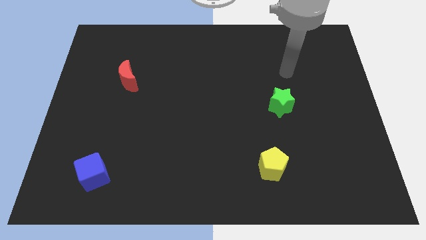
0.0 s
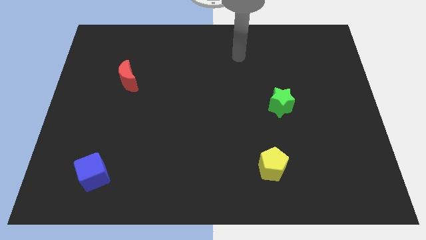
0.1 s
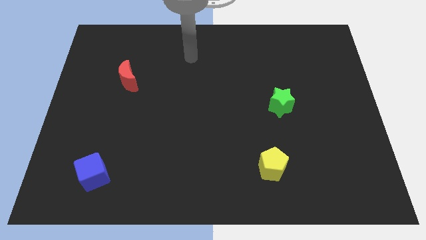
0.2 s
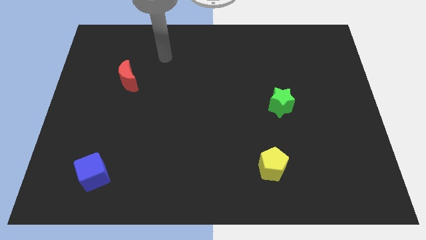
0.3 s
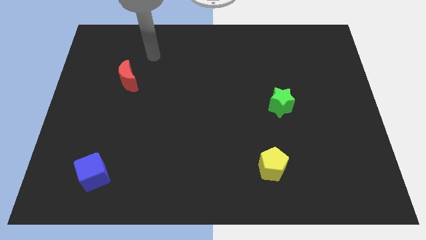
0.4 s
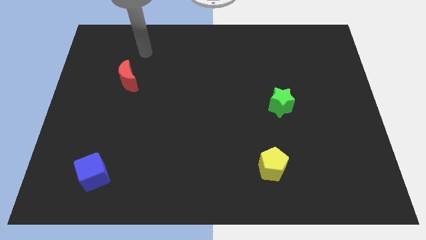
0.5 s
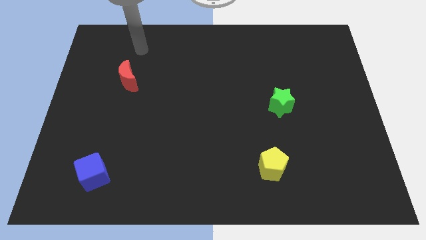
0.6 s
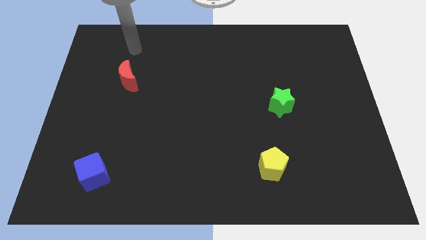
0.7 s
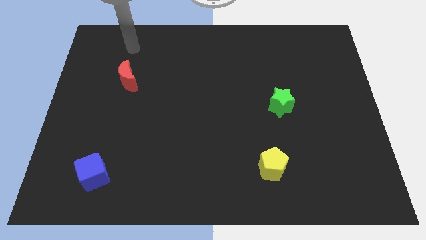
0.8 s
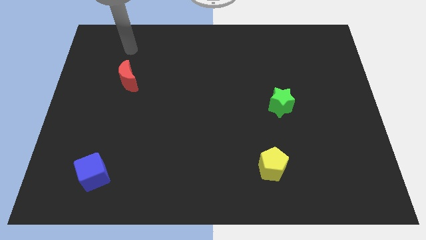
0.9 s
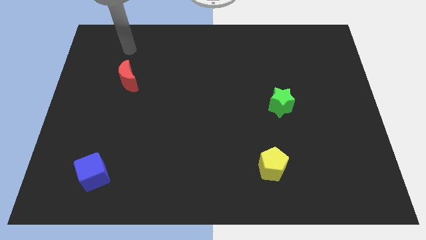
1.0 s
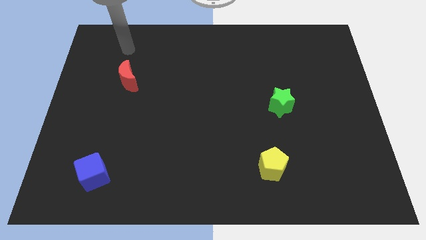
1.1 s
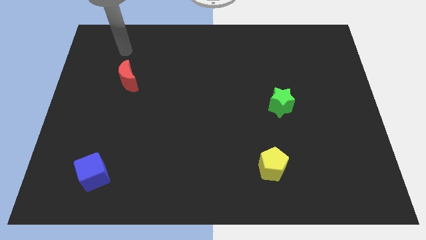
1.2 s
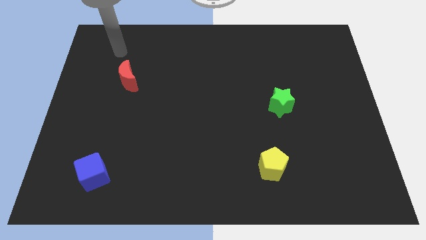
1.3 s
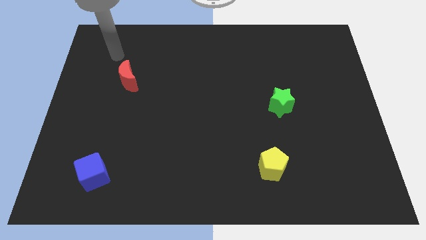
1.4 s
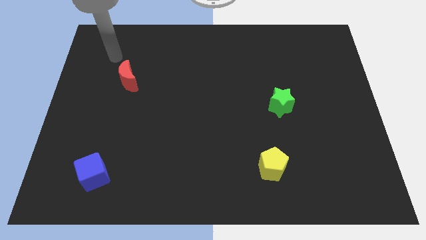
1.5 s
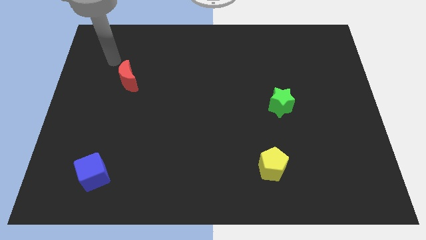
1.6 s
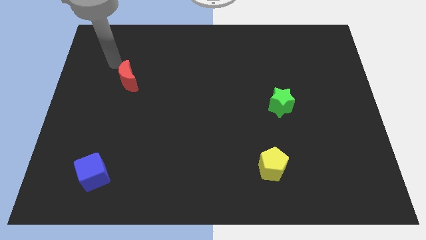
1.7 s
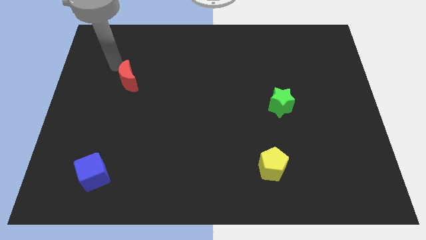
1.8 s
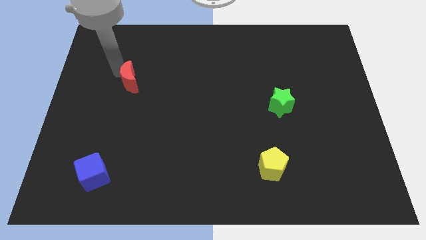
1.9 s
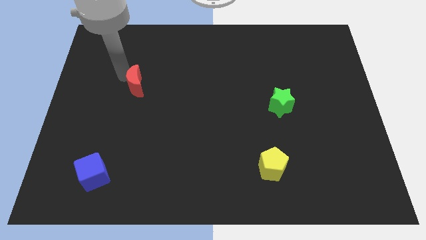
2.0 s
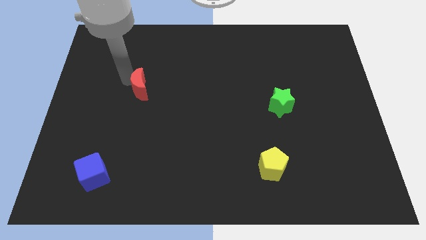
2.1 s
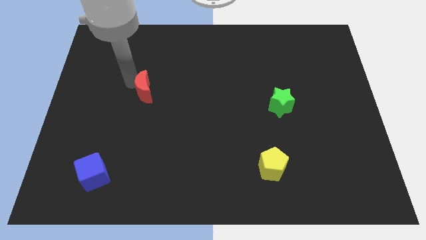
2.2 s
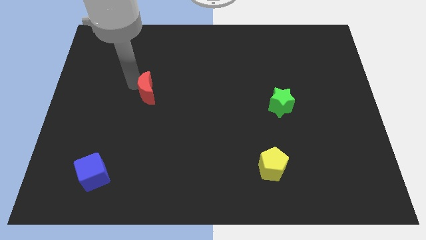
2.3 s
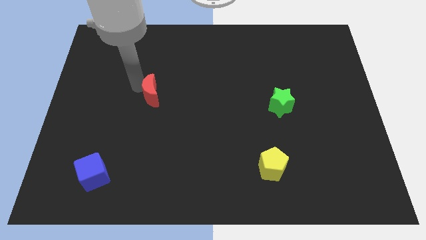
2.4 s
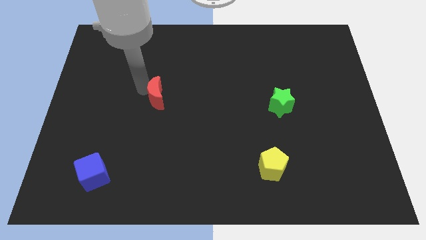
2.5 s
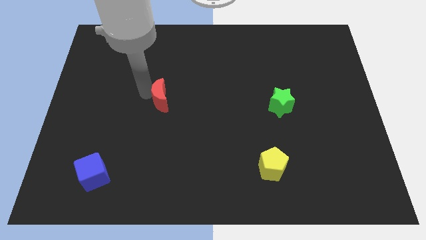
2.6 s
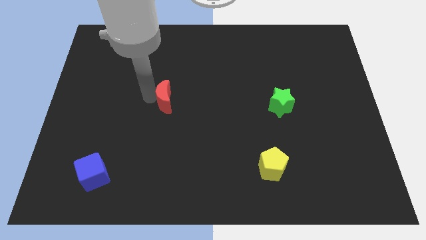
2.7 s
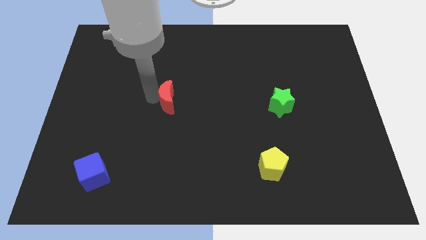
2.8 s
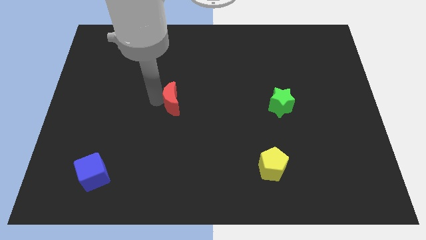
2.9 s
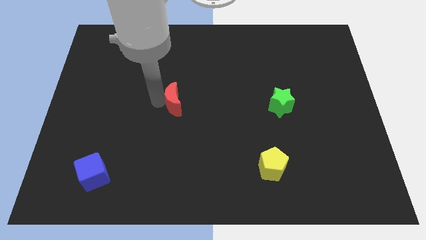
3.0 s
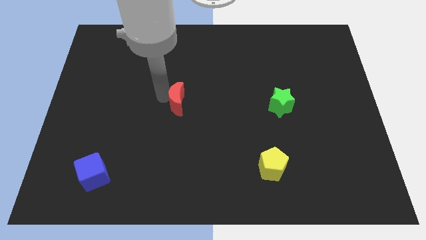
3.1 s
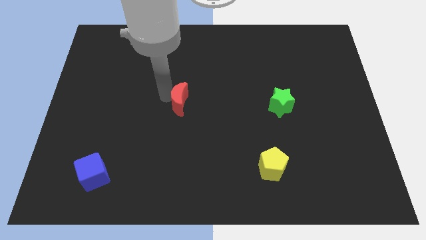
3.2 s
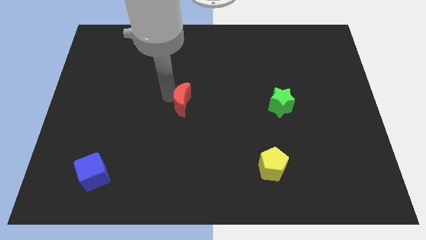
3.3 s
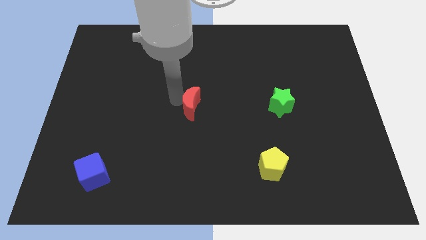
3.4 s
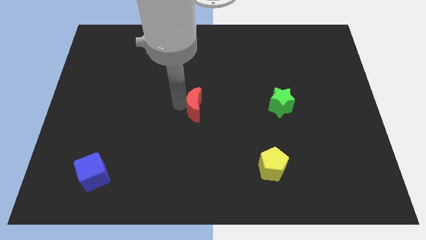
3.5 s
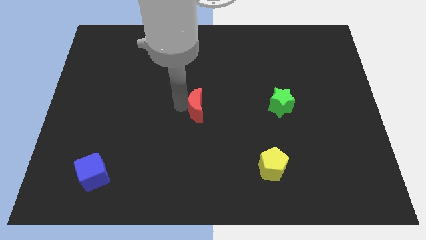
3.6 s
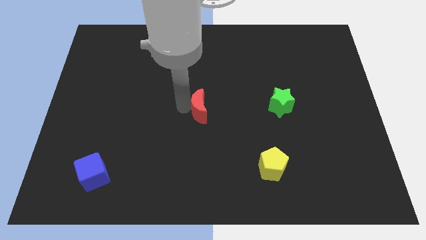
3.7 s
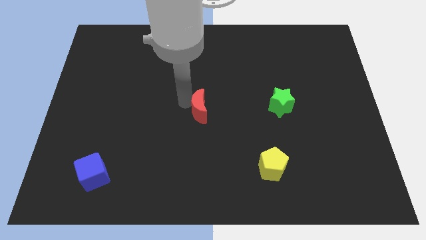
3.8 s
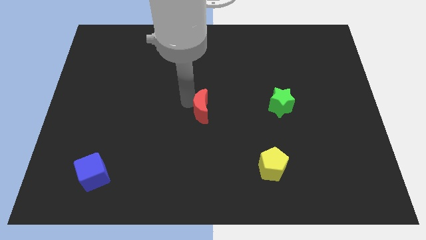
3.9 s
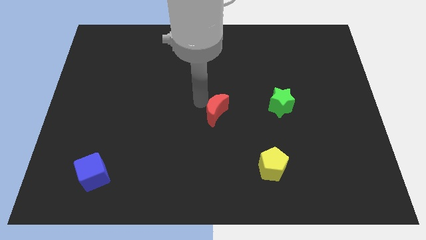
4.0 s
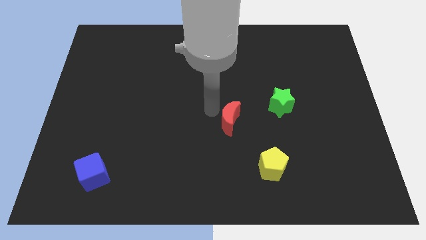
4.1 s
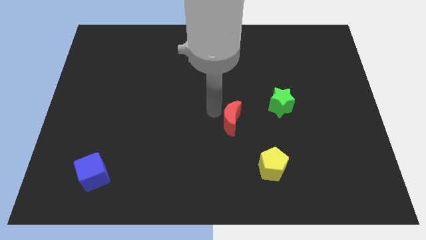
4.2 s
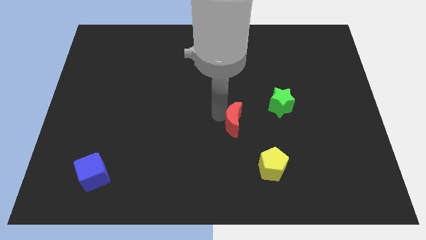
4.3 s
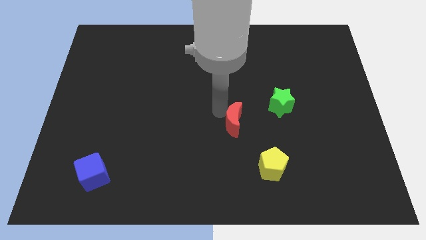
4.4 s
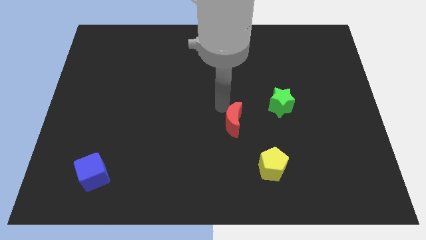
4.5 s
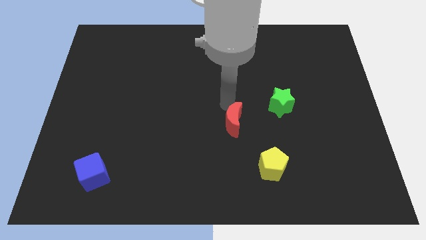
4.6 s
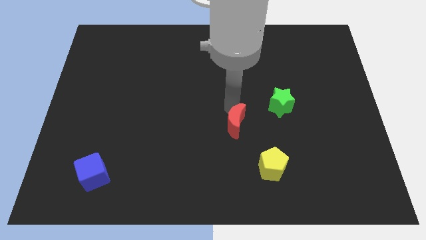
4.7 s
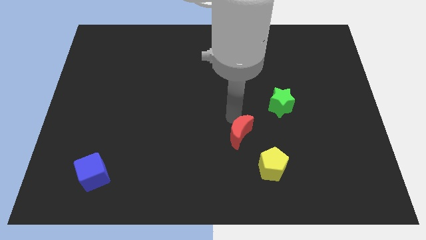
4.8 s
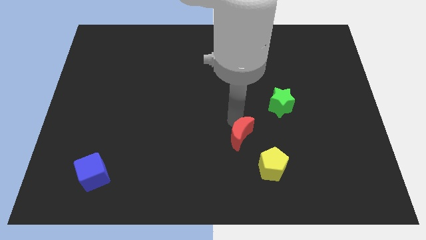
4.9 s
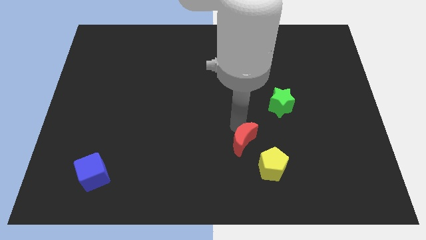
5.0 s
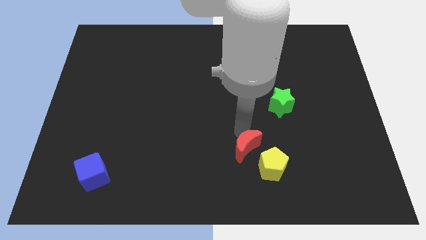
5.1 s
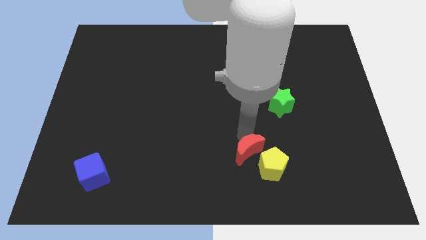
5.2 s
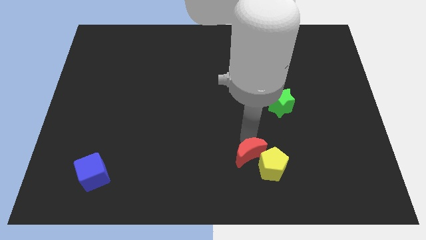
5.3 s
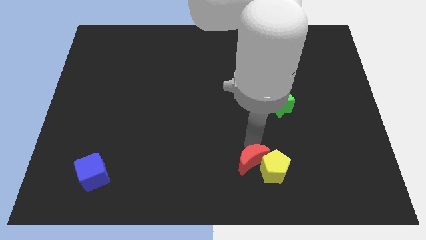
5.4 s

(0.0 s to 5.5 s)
move the red moon towards the yellow block

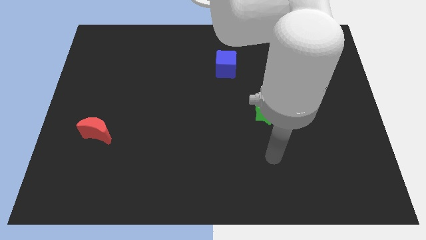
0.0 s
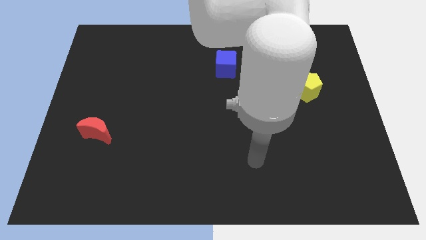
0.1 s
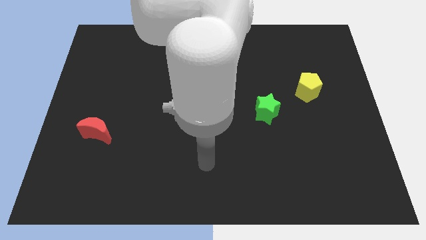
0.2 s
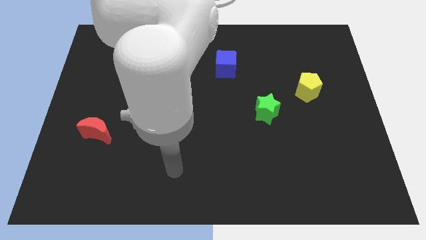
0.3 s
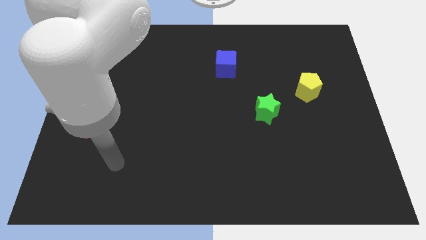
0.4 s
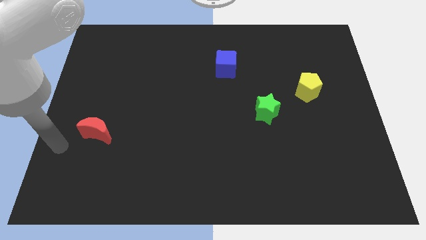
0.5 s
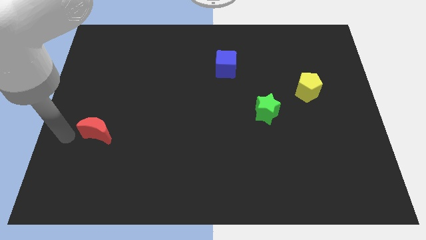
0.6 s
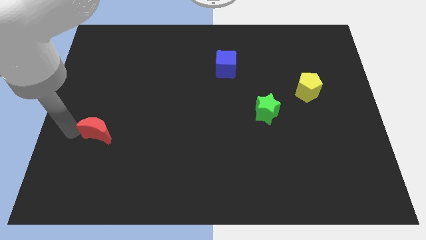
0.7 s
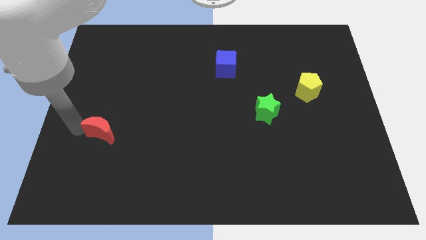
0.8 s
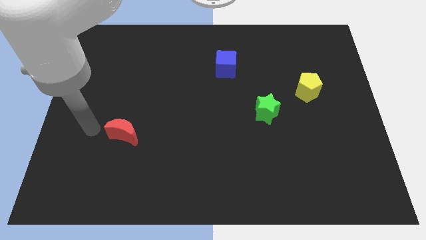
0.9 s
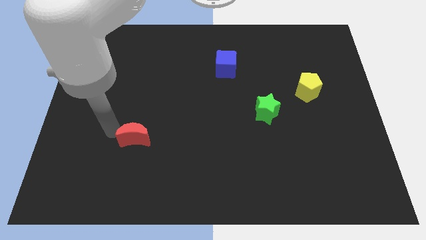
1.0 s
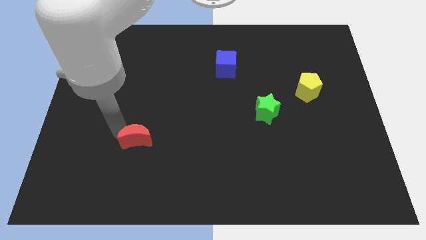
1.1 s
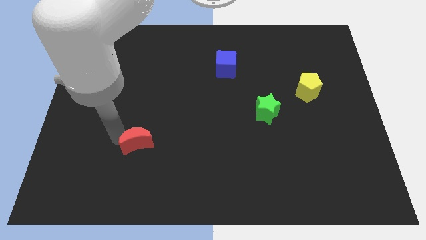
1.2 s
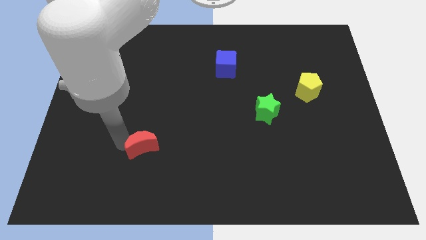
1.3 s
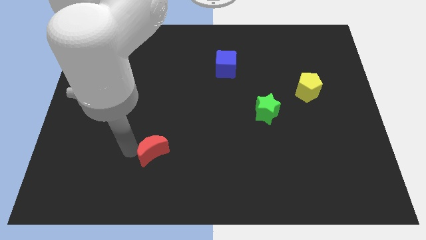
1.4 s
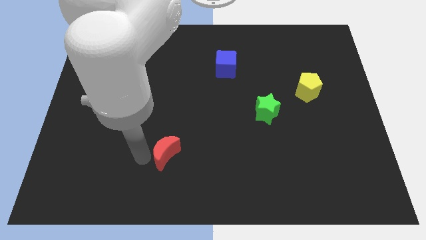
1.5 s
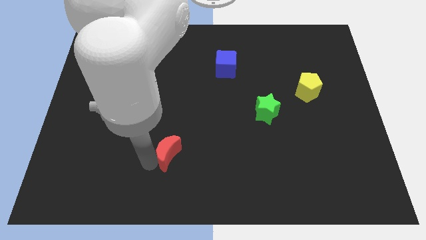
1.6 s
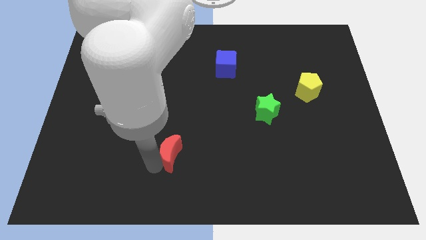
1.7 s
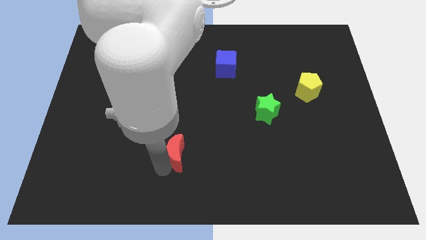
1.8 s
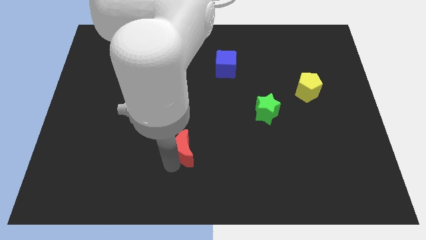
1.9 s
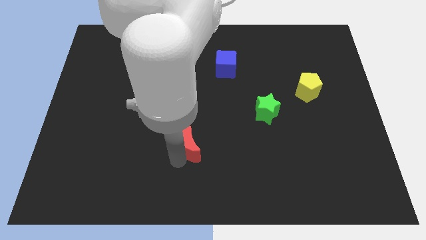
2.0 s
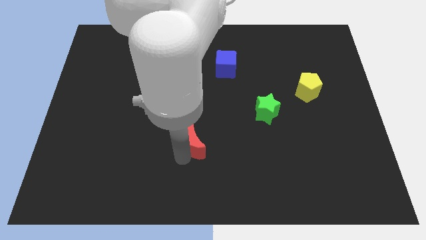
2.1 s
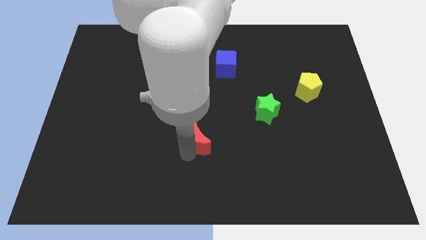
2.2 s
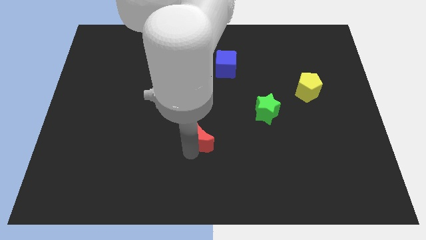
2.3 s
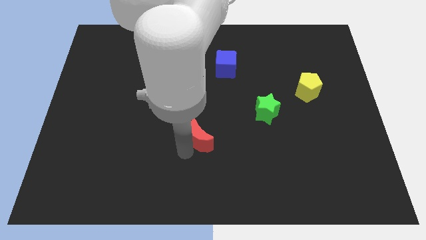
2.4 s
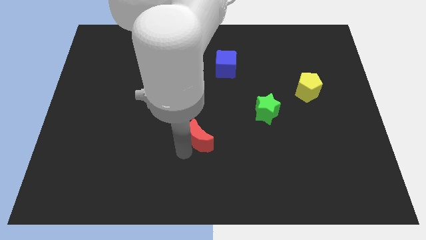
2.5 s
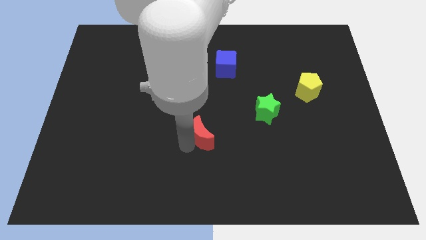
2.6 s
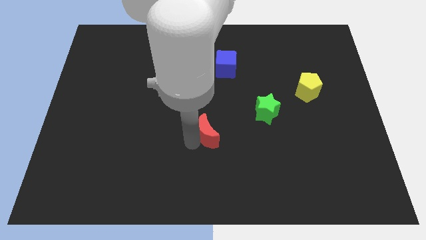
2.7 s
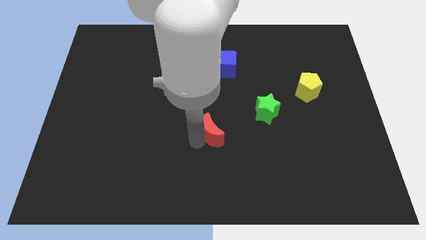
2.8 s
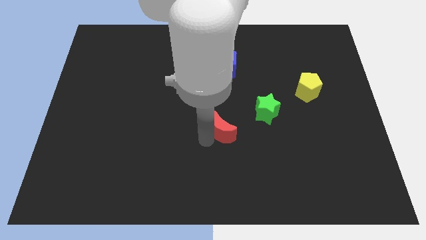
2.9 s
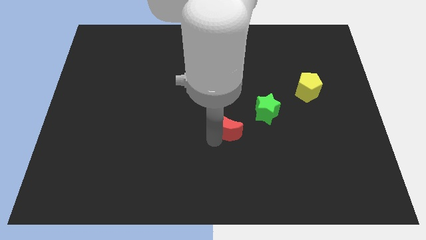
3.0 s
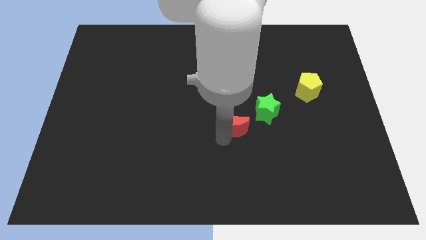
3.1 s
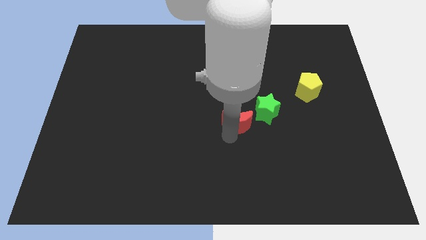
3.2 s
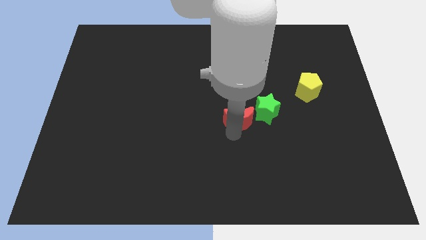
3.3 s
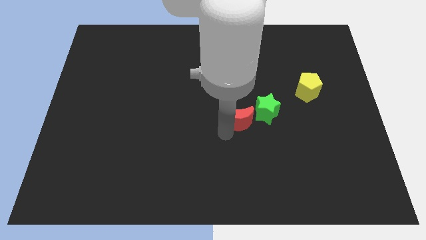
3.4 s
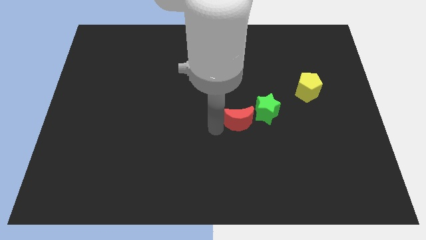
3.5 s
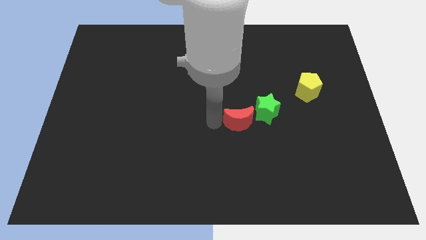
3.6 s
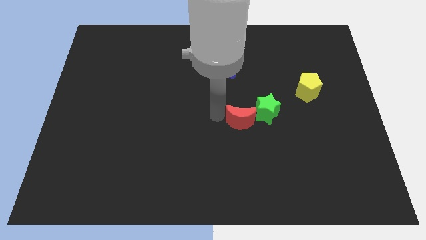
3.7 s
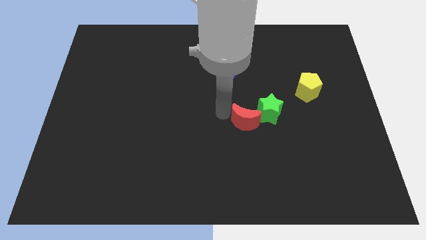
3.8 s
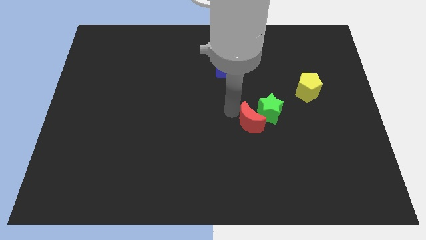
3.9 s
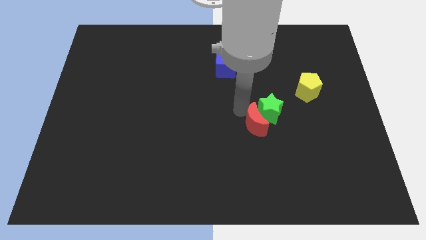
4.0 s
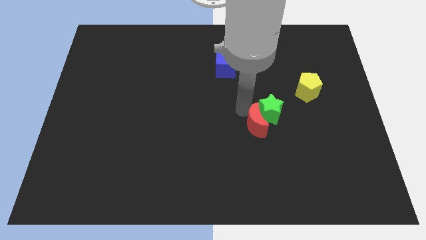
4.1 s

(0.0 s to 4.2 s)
push the red block towards the green star
